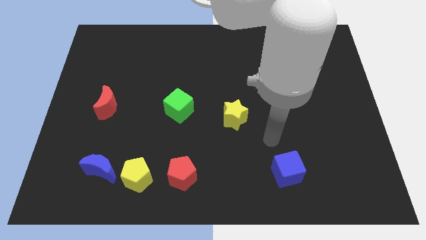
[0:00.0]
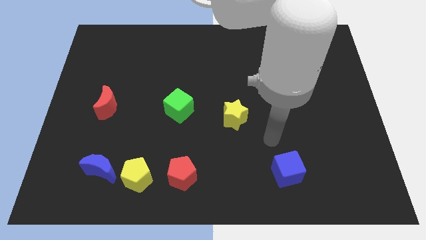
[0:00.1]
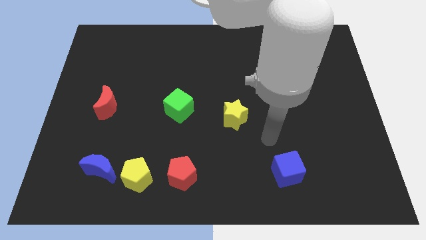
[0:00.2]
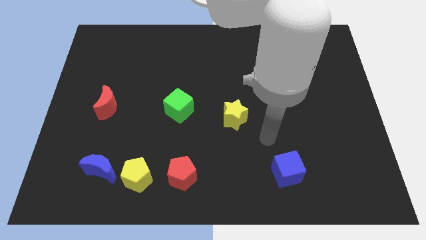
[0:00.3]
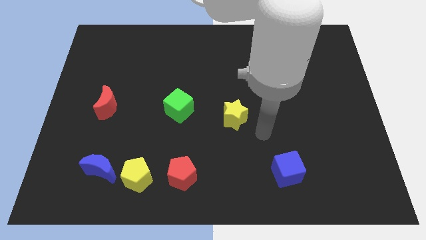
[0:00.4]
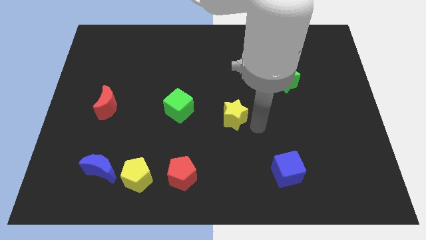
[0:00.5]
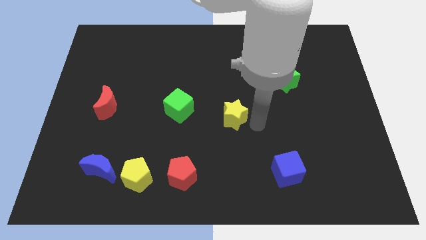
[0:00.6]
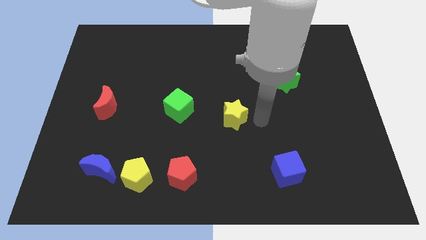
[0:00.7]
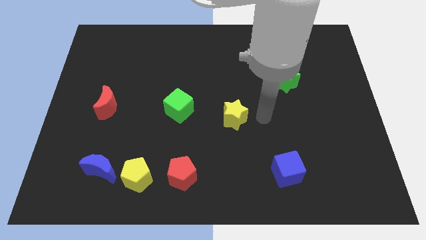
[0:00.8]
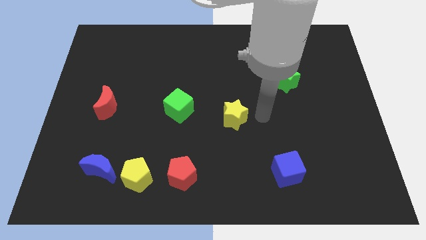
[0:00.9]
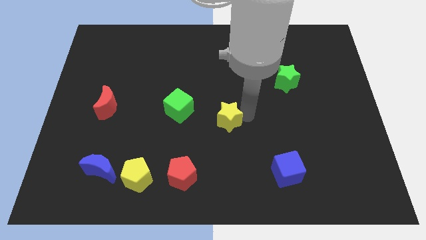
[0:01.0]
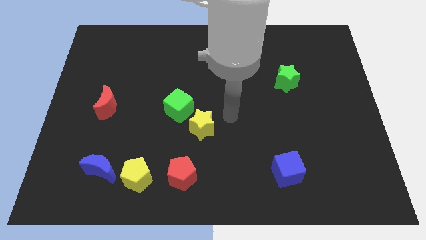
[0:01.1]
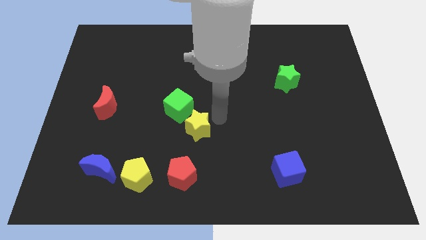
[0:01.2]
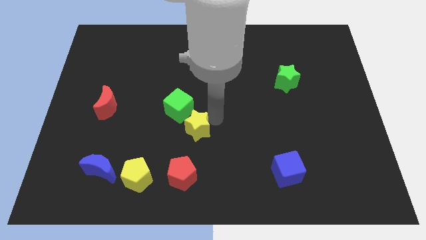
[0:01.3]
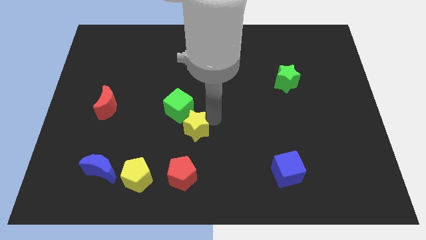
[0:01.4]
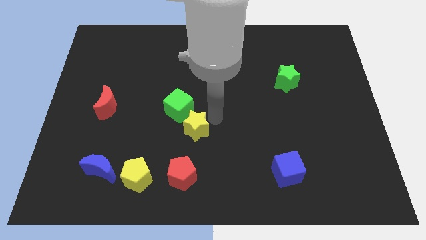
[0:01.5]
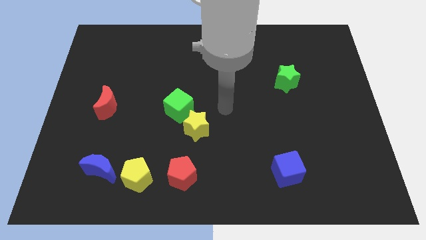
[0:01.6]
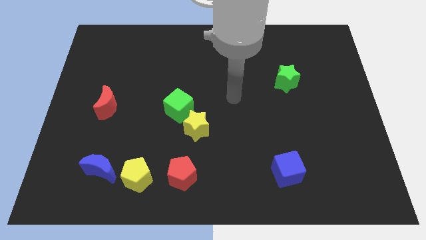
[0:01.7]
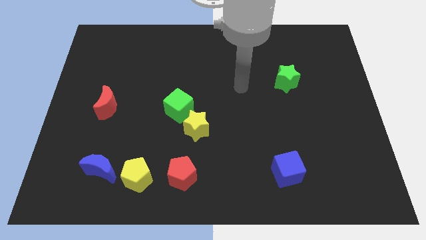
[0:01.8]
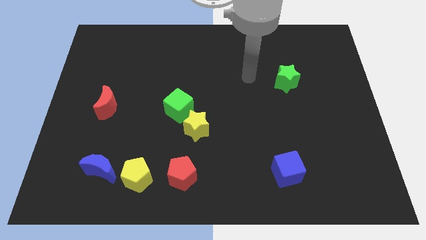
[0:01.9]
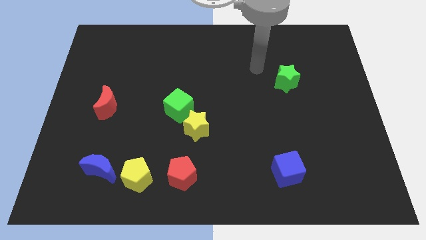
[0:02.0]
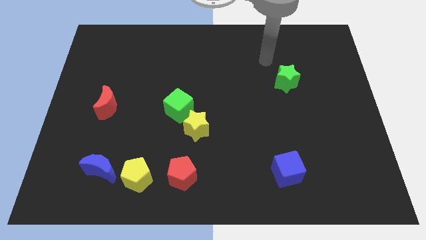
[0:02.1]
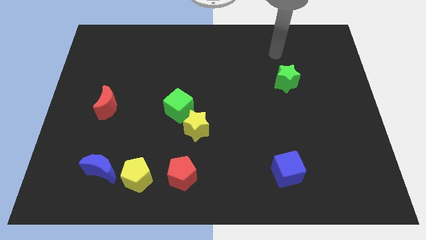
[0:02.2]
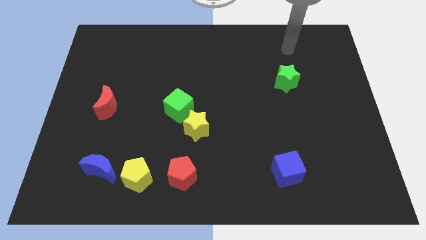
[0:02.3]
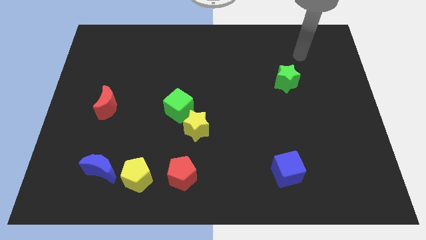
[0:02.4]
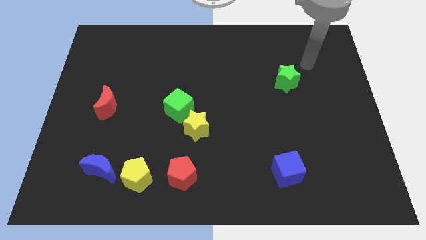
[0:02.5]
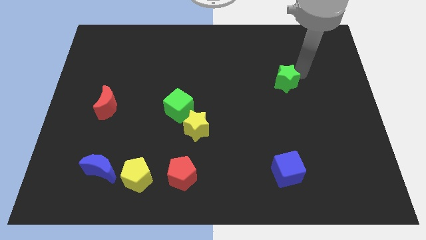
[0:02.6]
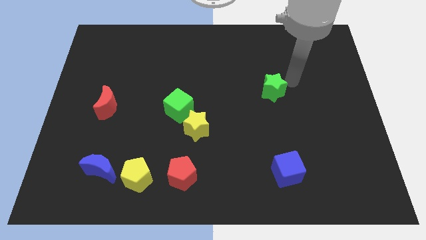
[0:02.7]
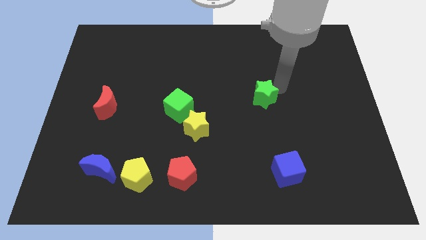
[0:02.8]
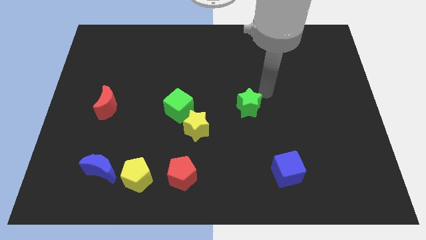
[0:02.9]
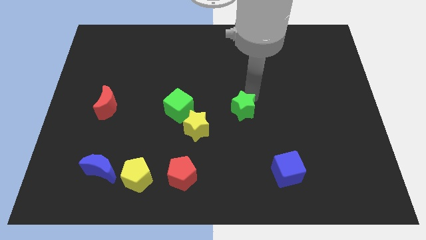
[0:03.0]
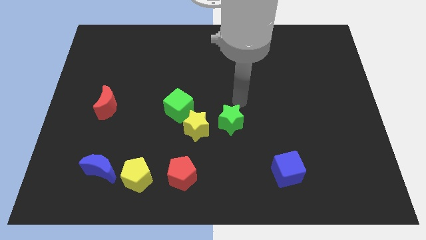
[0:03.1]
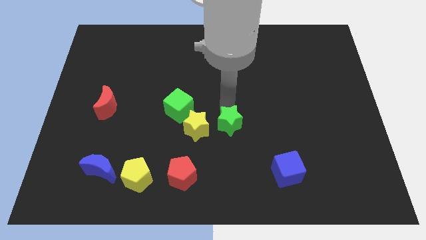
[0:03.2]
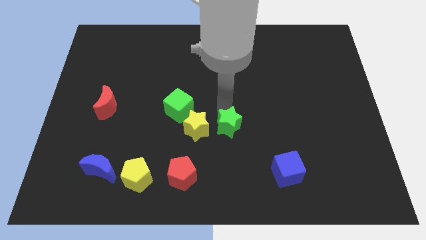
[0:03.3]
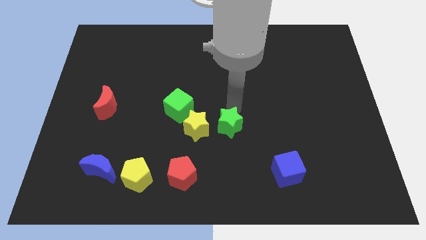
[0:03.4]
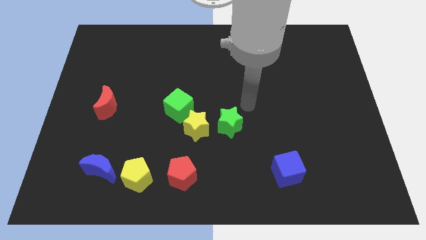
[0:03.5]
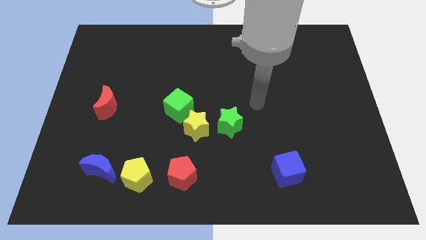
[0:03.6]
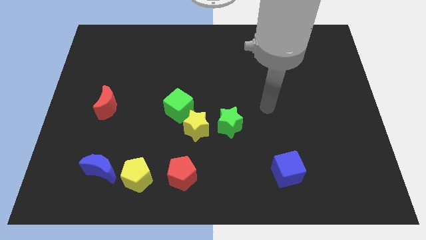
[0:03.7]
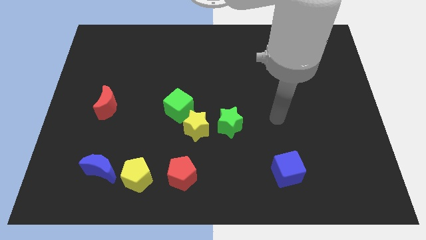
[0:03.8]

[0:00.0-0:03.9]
push green star near yellow star

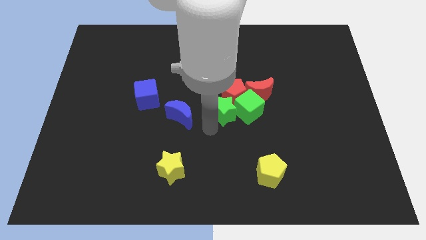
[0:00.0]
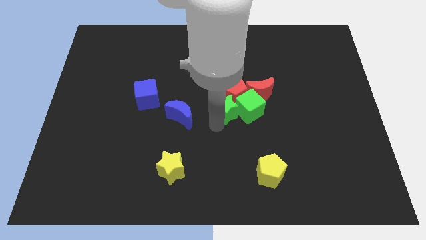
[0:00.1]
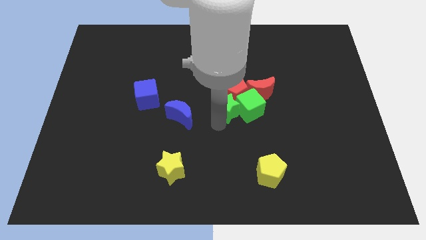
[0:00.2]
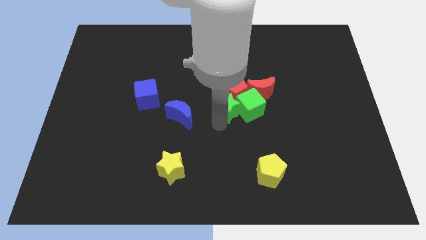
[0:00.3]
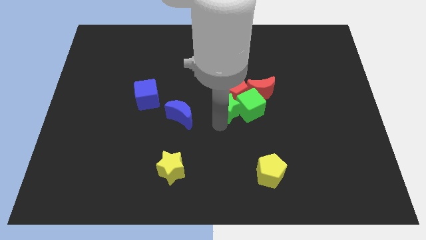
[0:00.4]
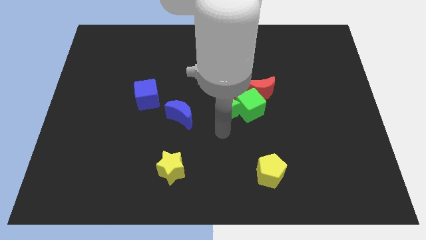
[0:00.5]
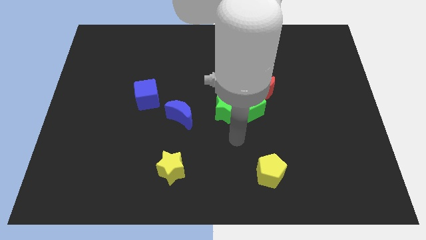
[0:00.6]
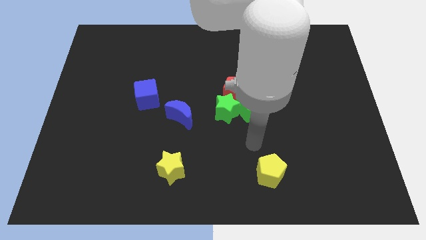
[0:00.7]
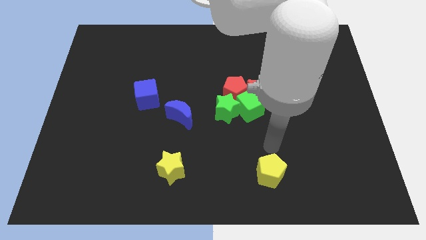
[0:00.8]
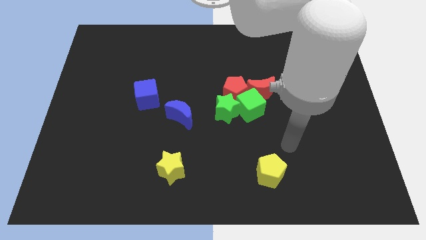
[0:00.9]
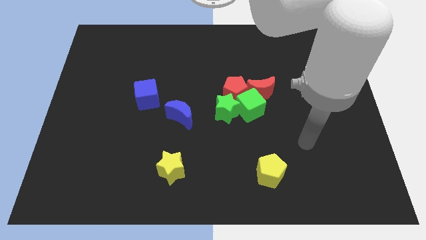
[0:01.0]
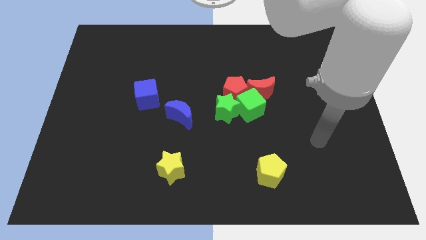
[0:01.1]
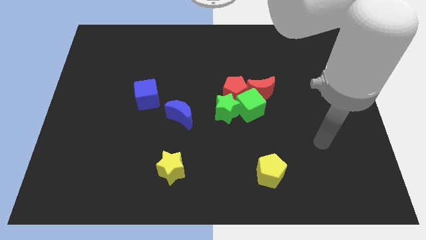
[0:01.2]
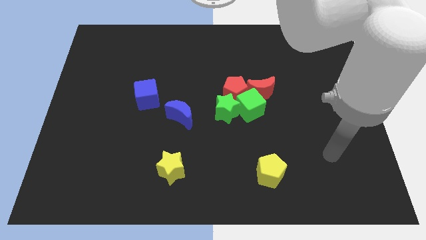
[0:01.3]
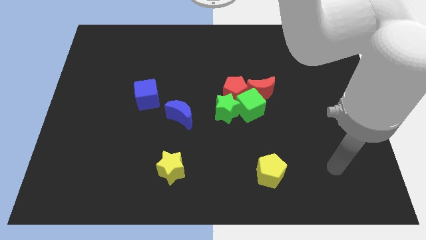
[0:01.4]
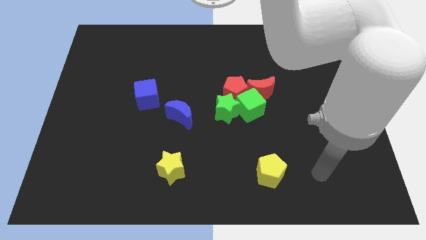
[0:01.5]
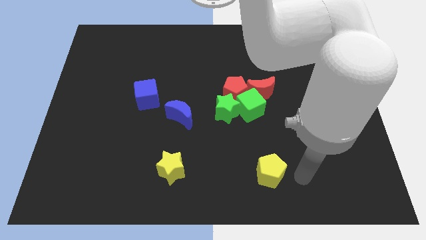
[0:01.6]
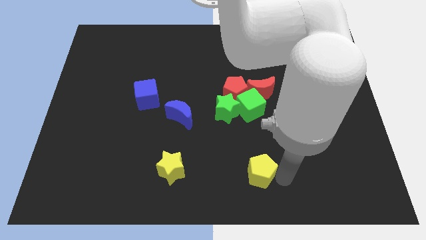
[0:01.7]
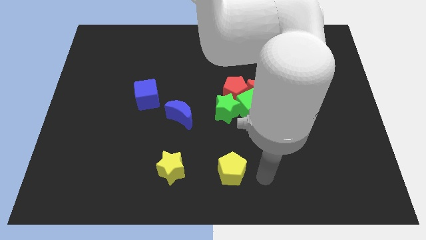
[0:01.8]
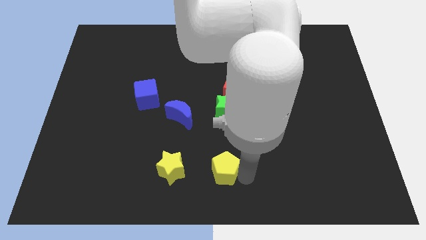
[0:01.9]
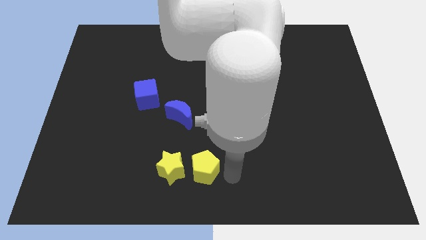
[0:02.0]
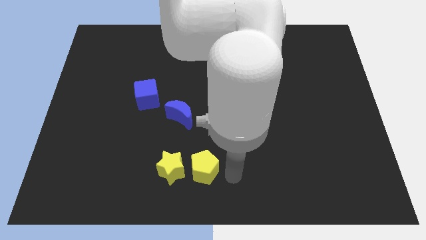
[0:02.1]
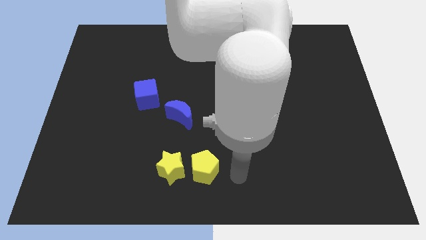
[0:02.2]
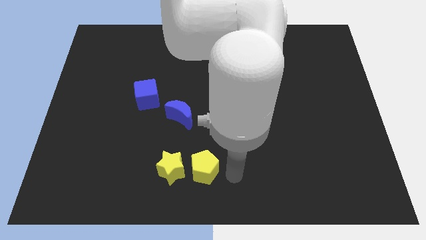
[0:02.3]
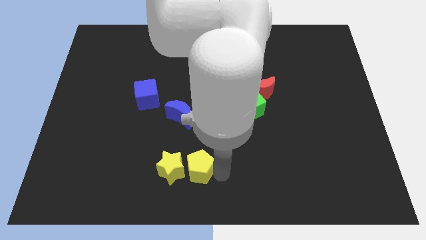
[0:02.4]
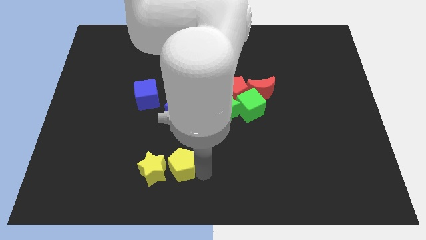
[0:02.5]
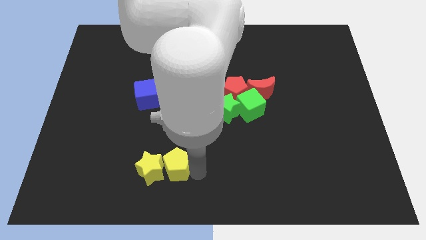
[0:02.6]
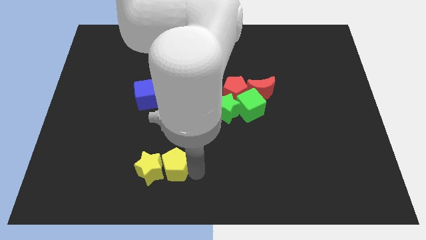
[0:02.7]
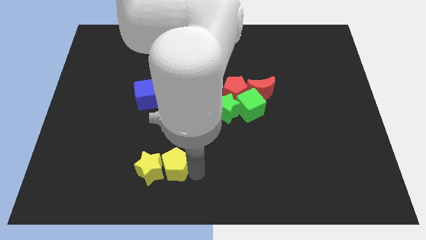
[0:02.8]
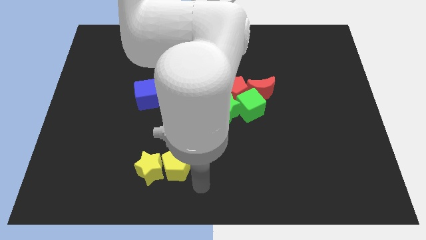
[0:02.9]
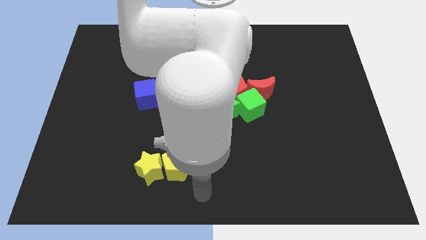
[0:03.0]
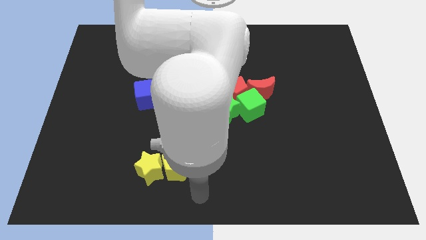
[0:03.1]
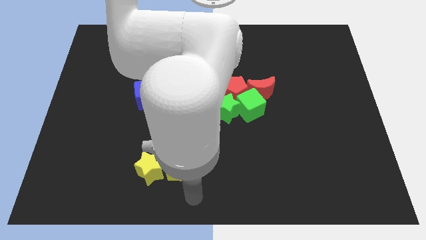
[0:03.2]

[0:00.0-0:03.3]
push the yellow pentagon into the yellow star

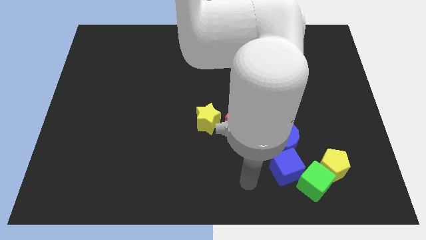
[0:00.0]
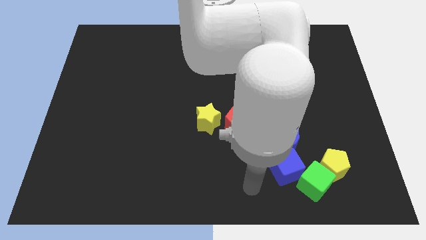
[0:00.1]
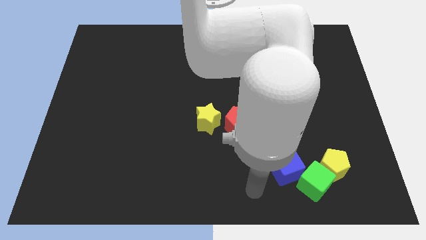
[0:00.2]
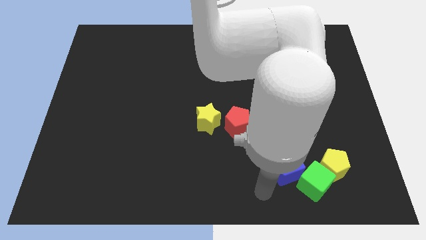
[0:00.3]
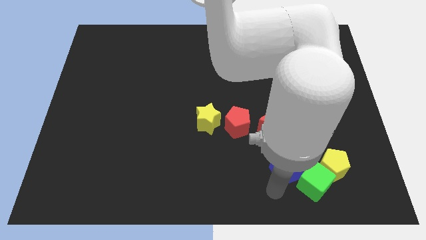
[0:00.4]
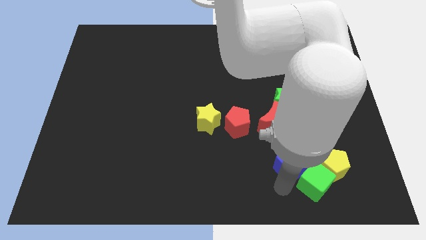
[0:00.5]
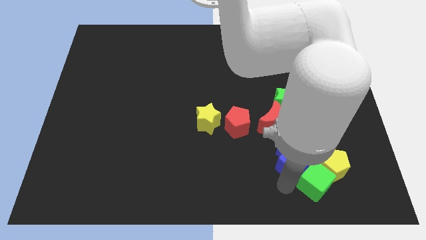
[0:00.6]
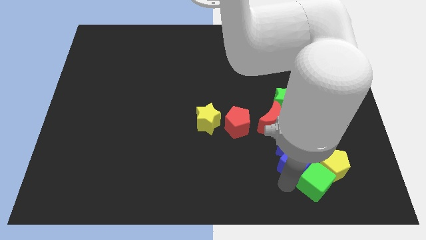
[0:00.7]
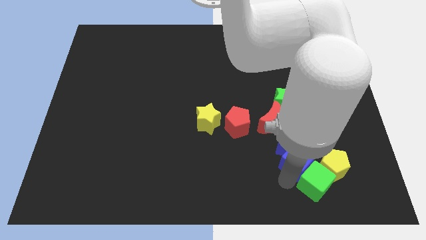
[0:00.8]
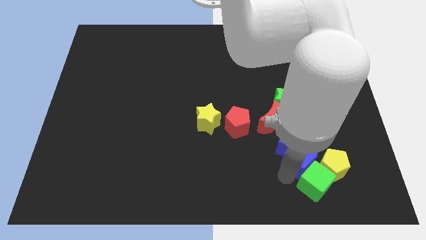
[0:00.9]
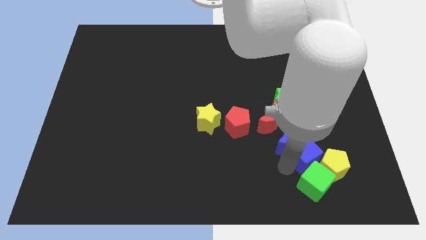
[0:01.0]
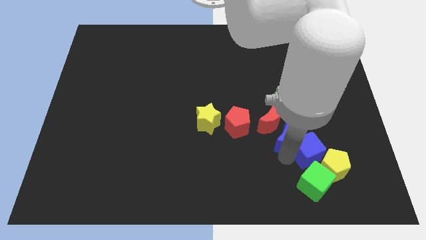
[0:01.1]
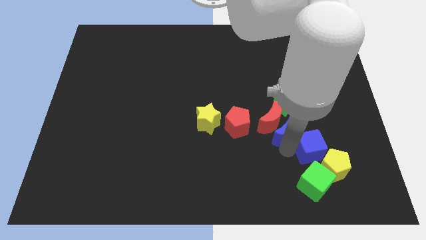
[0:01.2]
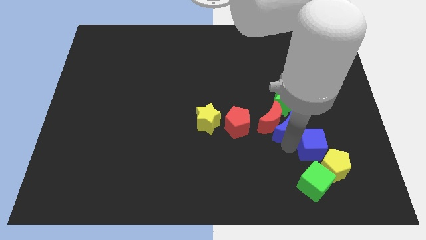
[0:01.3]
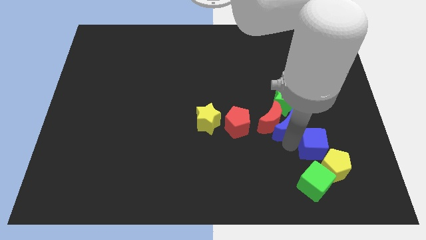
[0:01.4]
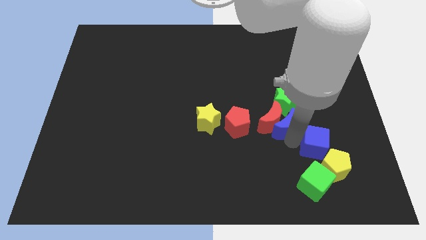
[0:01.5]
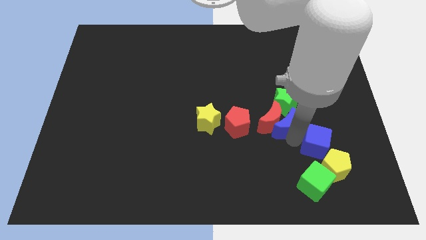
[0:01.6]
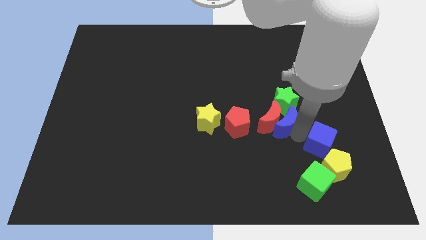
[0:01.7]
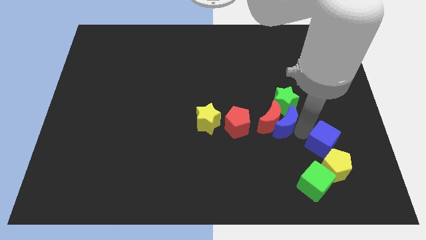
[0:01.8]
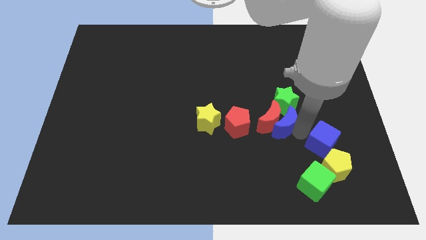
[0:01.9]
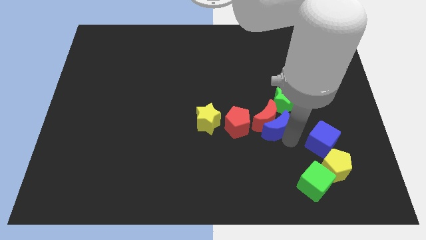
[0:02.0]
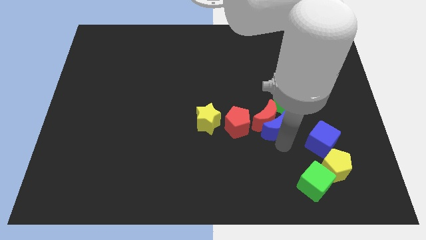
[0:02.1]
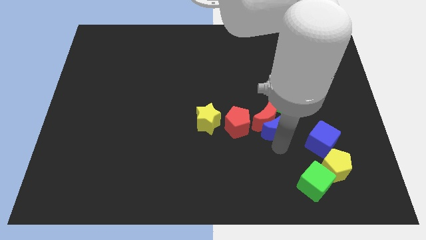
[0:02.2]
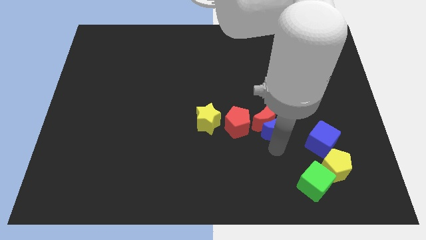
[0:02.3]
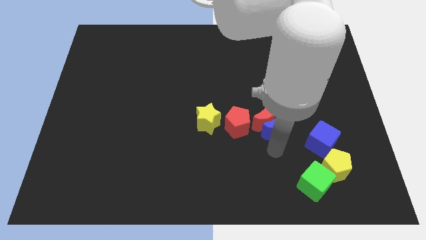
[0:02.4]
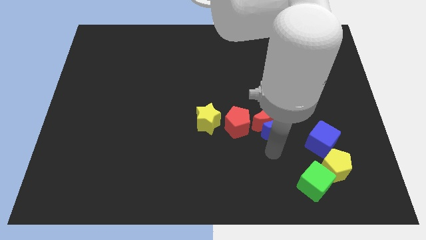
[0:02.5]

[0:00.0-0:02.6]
push blue cube above the yellow pentagon
